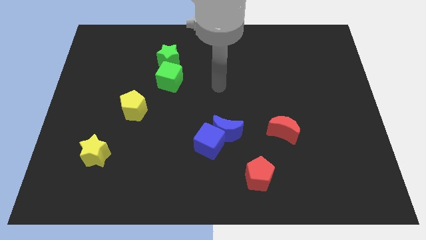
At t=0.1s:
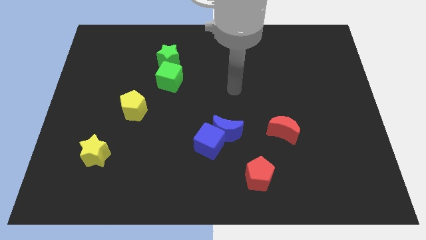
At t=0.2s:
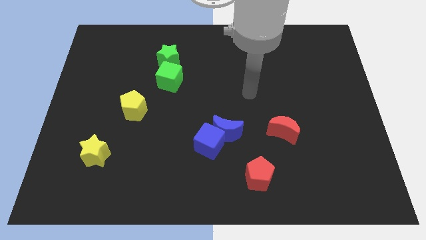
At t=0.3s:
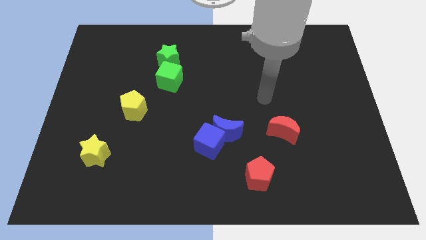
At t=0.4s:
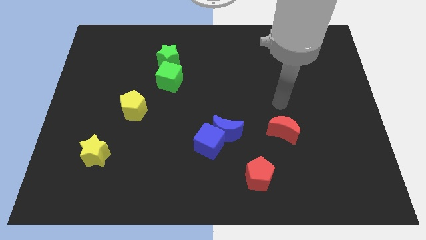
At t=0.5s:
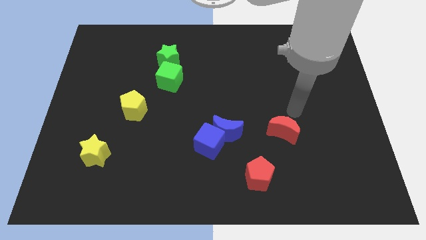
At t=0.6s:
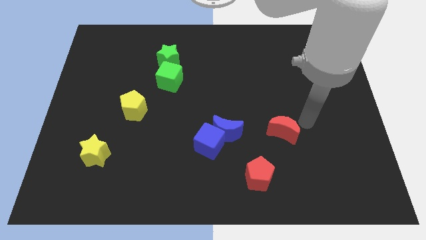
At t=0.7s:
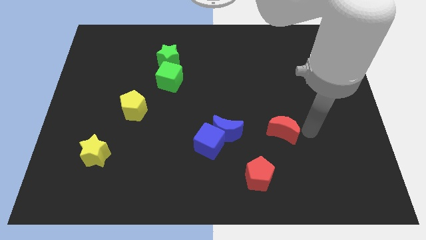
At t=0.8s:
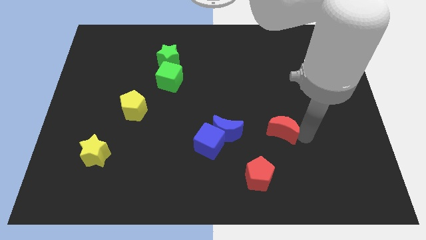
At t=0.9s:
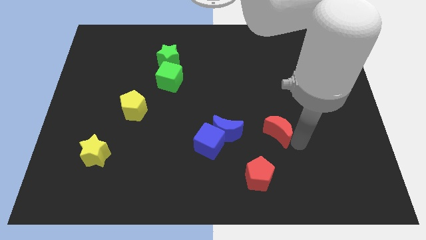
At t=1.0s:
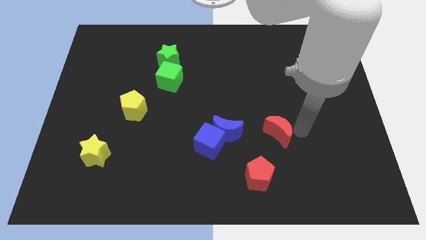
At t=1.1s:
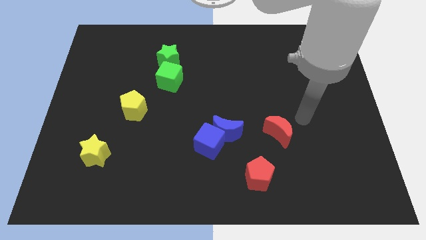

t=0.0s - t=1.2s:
move arm to the red moon

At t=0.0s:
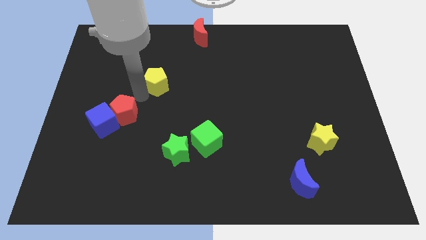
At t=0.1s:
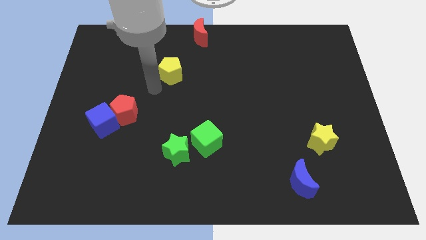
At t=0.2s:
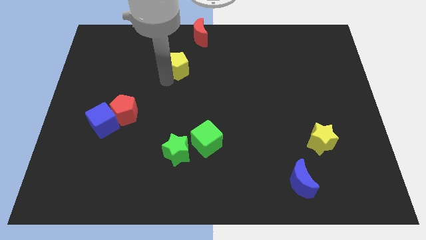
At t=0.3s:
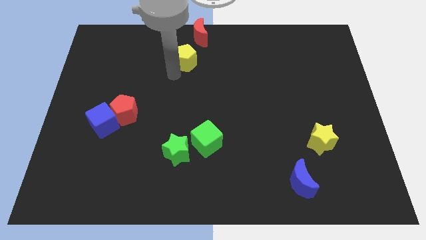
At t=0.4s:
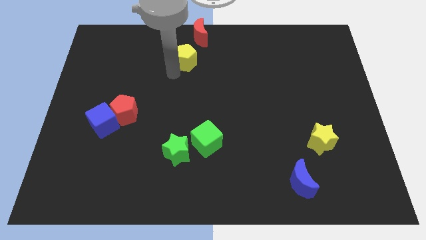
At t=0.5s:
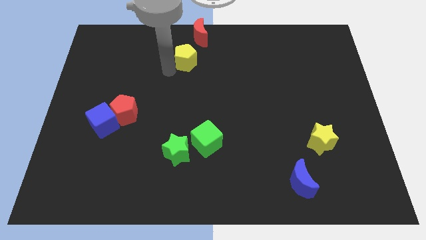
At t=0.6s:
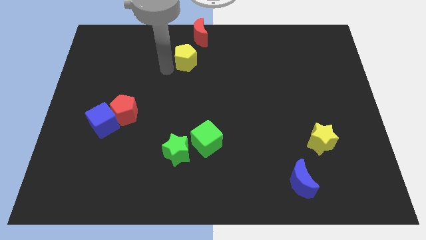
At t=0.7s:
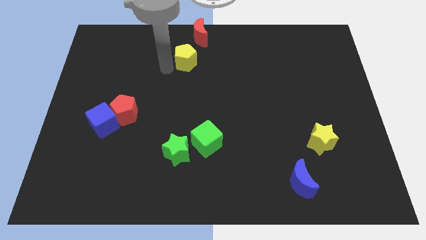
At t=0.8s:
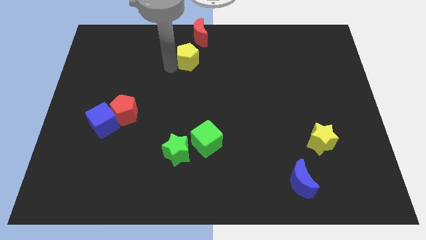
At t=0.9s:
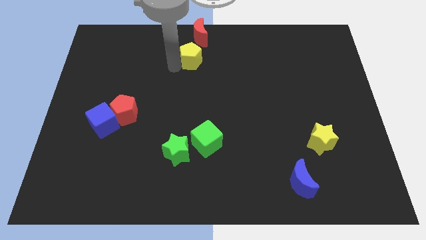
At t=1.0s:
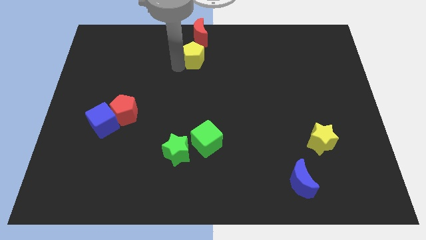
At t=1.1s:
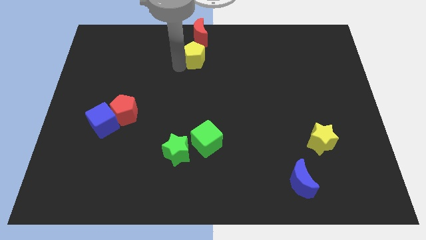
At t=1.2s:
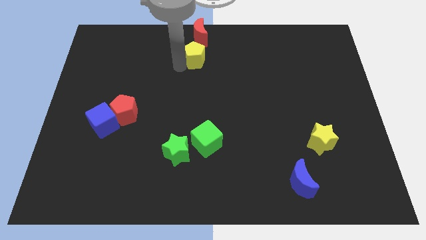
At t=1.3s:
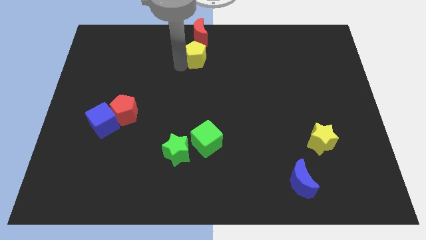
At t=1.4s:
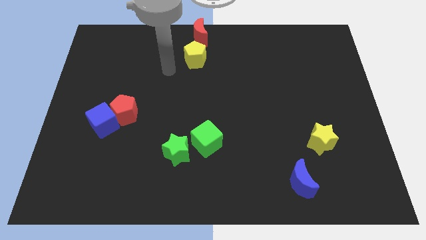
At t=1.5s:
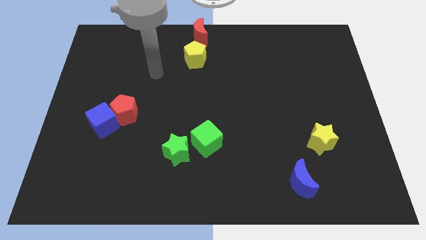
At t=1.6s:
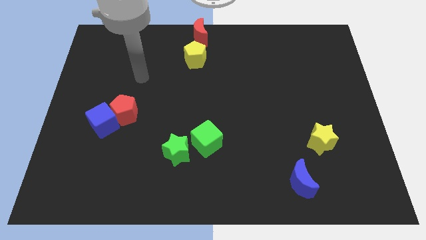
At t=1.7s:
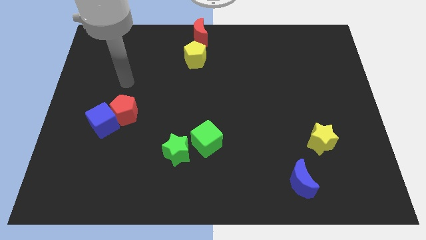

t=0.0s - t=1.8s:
place yellow pentagon below the red crescent

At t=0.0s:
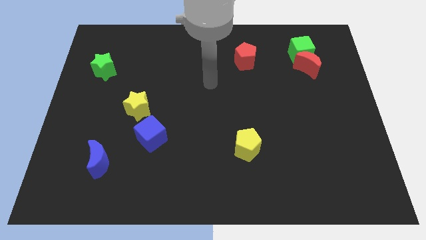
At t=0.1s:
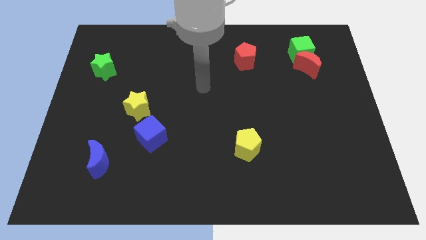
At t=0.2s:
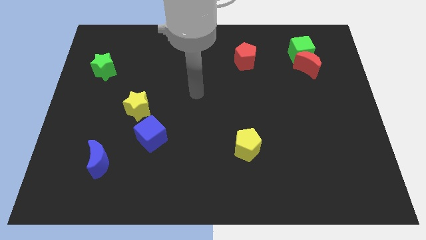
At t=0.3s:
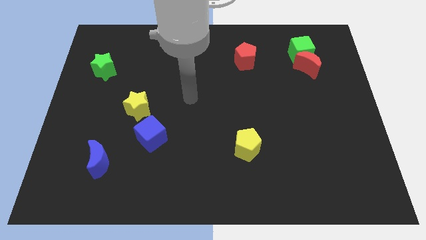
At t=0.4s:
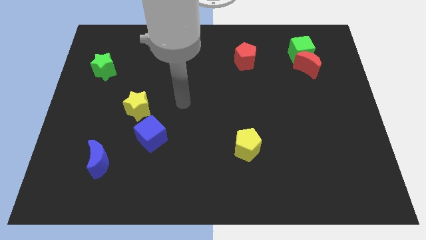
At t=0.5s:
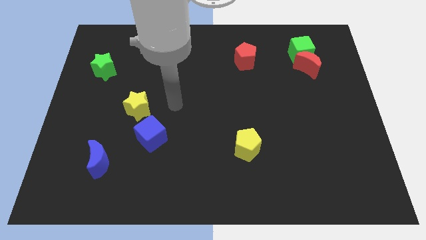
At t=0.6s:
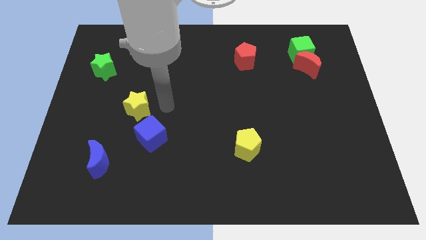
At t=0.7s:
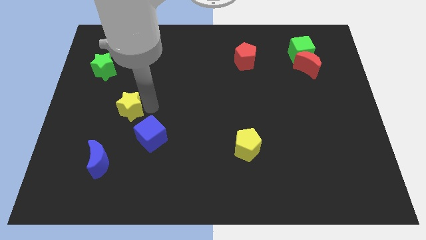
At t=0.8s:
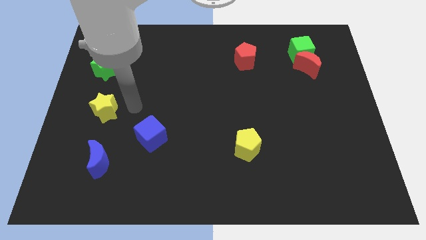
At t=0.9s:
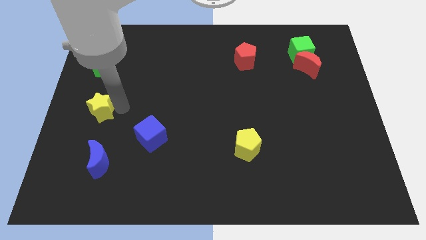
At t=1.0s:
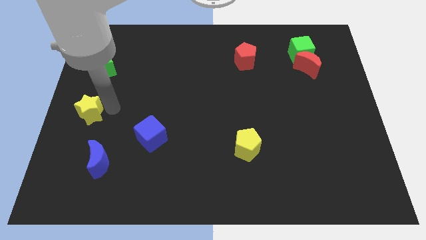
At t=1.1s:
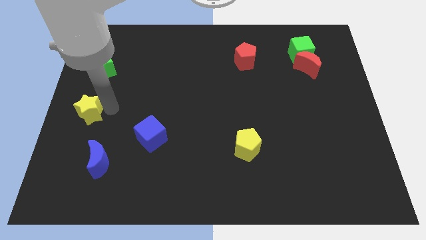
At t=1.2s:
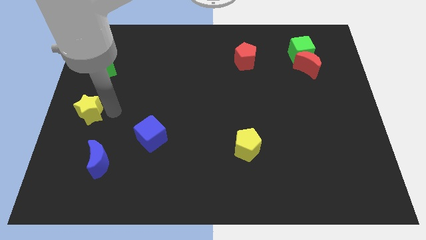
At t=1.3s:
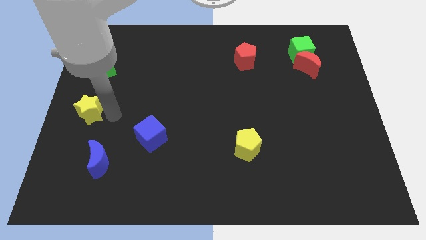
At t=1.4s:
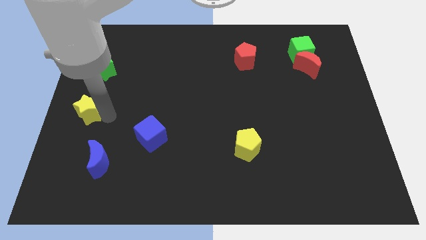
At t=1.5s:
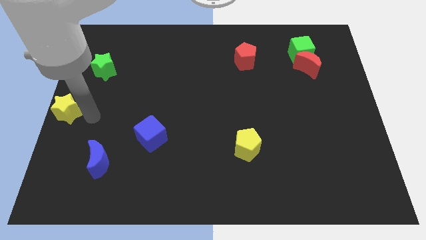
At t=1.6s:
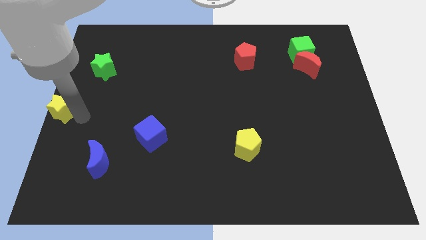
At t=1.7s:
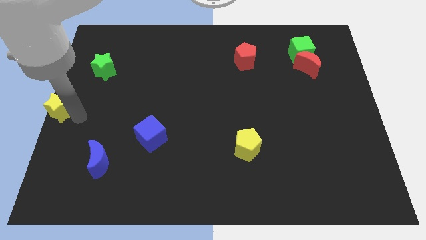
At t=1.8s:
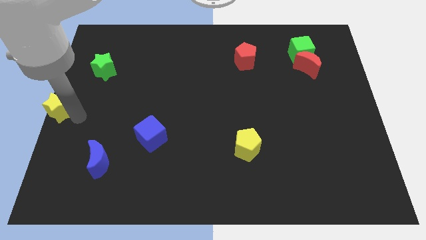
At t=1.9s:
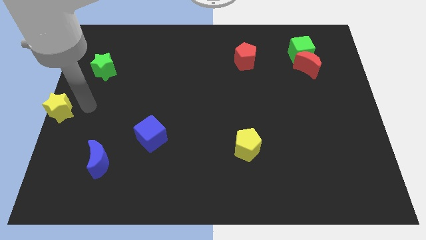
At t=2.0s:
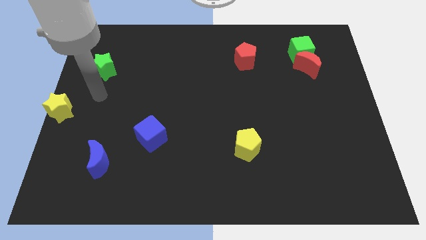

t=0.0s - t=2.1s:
push the yellow star to the left centre

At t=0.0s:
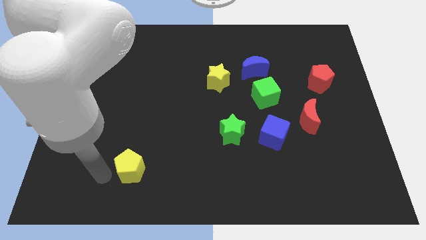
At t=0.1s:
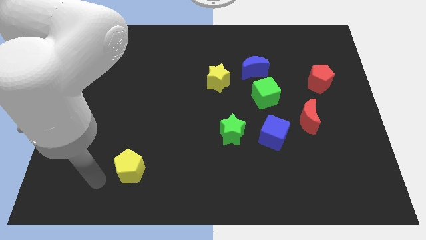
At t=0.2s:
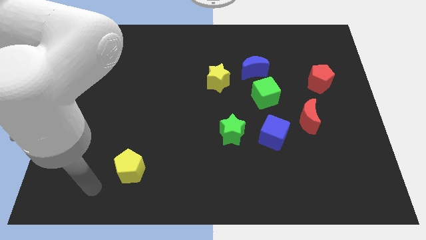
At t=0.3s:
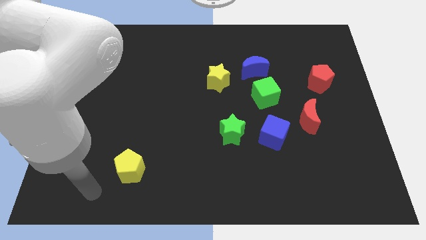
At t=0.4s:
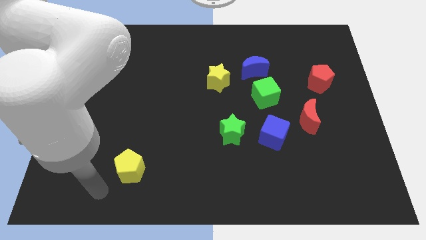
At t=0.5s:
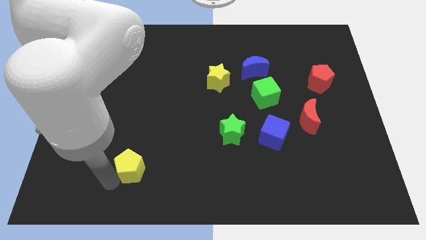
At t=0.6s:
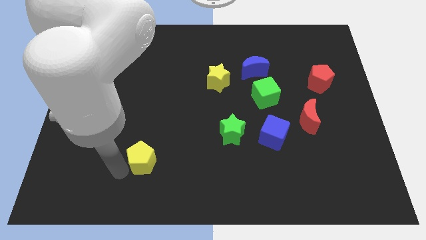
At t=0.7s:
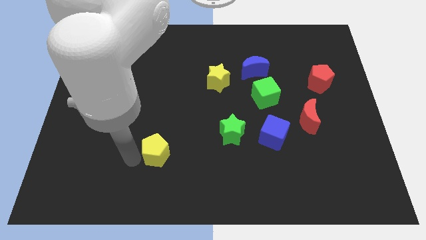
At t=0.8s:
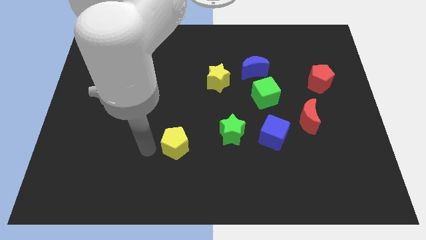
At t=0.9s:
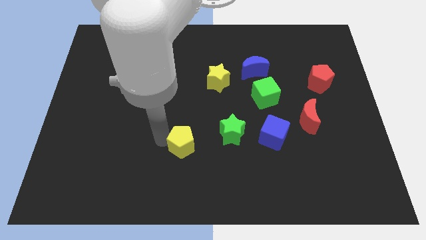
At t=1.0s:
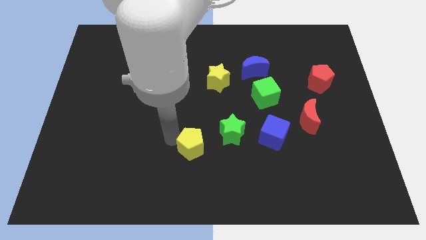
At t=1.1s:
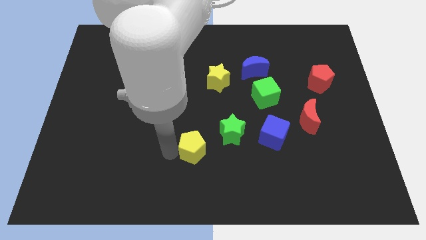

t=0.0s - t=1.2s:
push the yellow pentagon diagonally to the bottom left the green star

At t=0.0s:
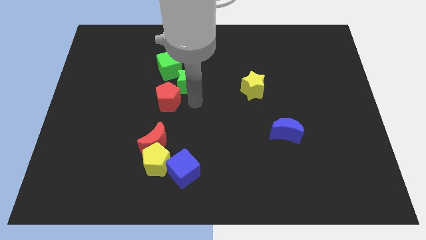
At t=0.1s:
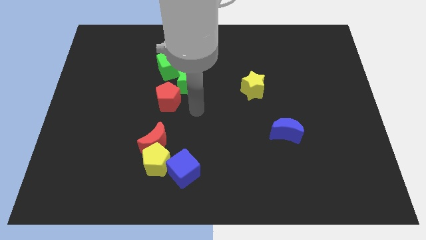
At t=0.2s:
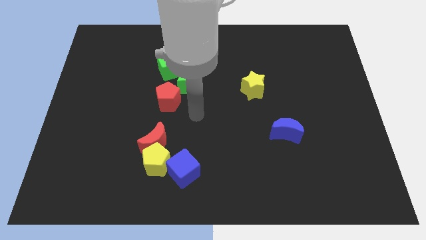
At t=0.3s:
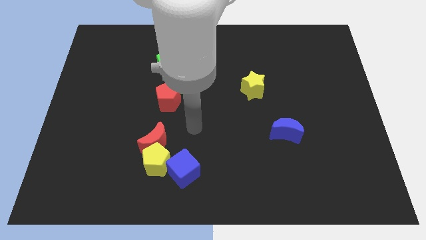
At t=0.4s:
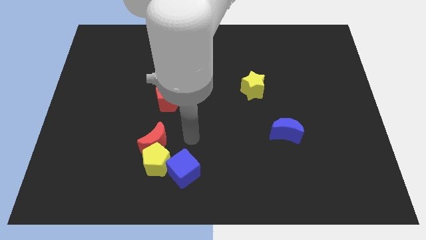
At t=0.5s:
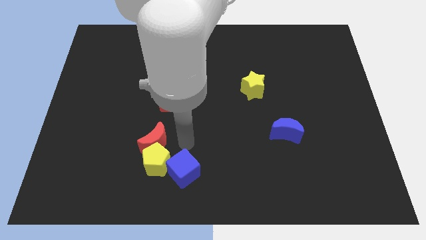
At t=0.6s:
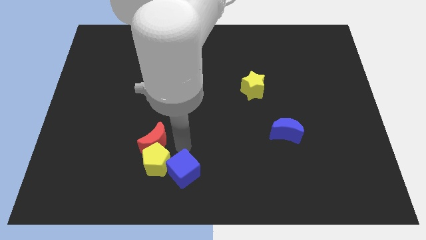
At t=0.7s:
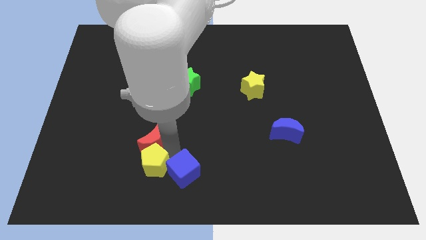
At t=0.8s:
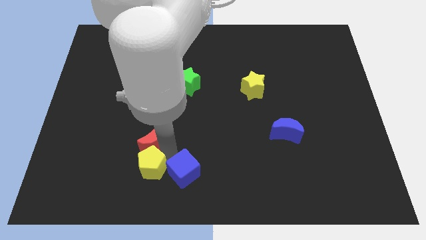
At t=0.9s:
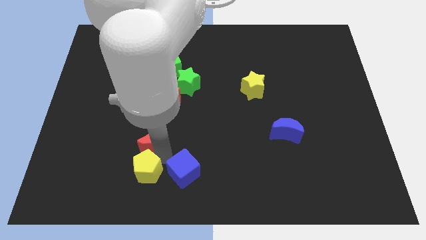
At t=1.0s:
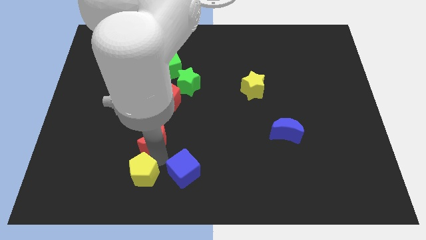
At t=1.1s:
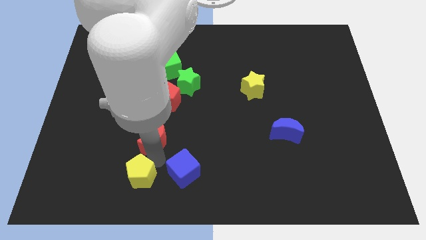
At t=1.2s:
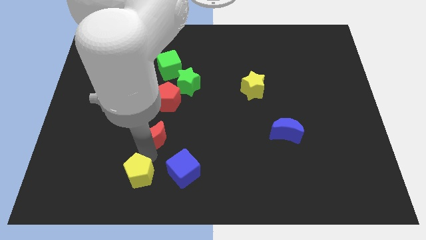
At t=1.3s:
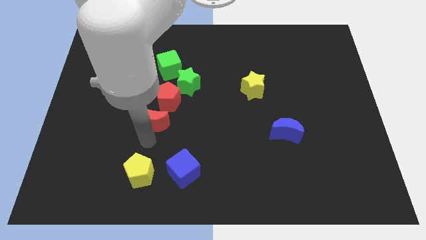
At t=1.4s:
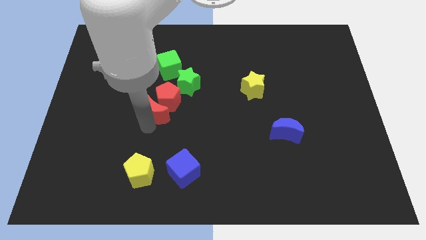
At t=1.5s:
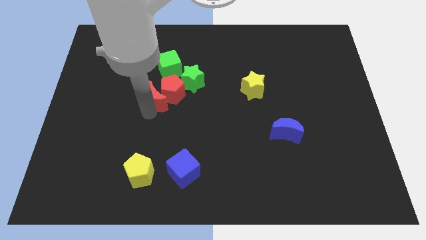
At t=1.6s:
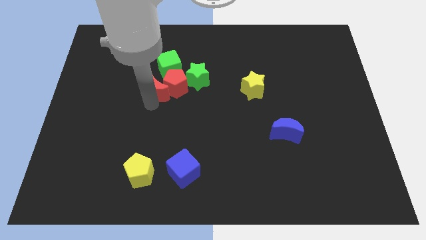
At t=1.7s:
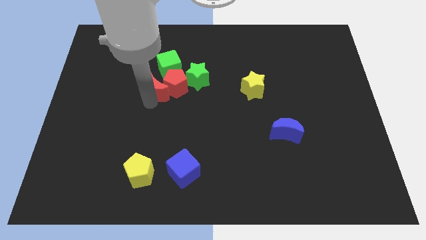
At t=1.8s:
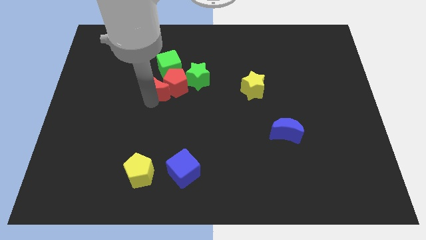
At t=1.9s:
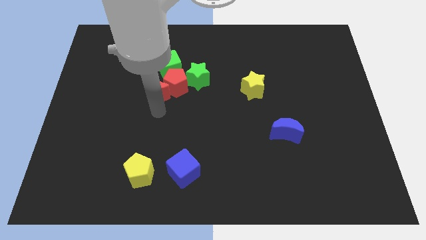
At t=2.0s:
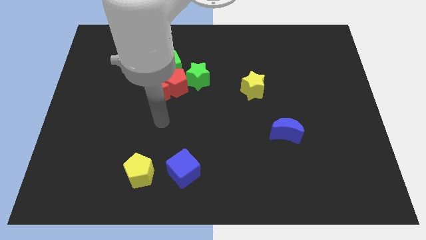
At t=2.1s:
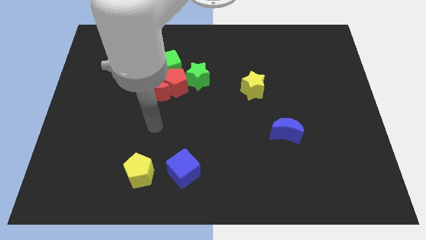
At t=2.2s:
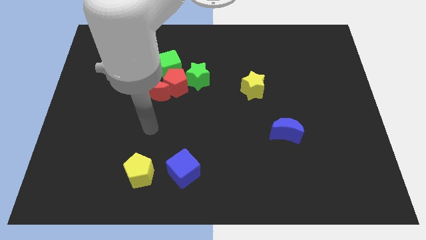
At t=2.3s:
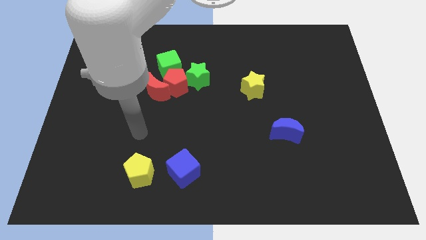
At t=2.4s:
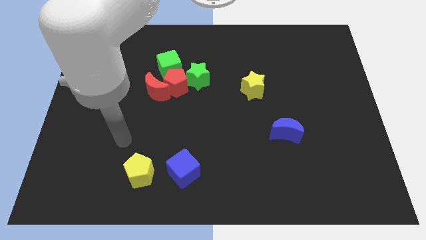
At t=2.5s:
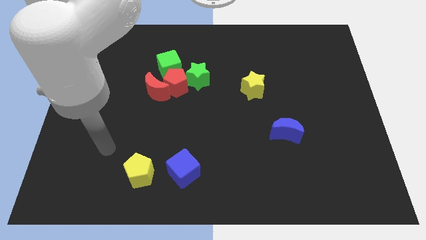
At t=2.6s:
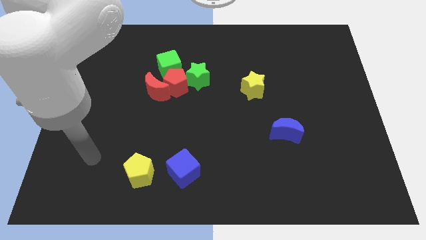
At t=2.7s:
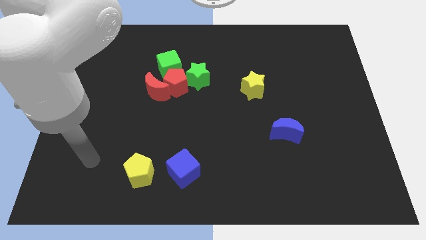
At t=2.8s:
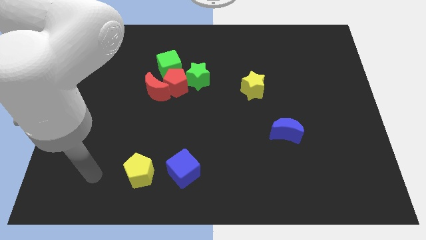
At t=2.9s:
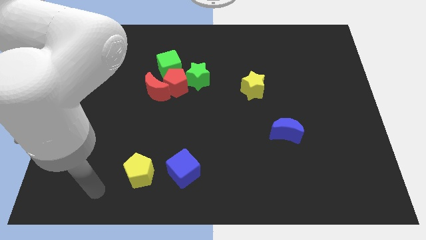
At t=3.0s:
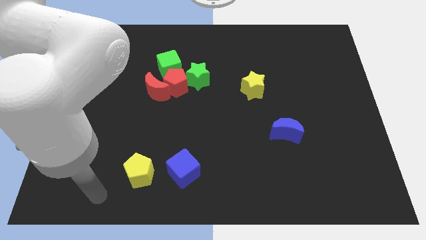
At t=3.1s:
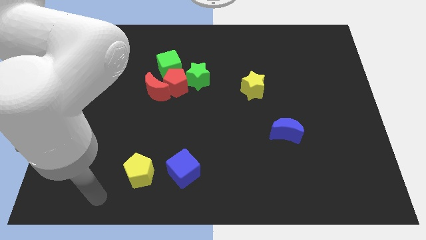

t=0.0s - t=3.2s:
separate red moon from yellow pentagon
